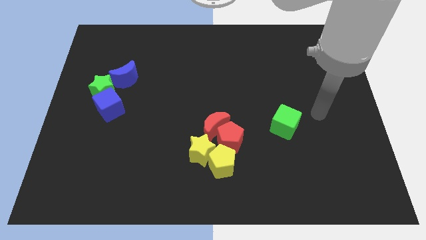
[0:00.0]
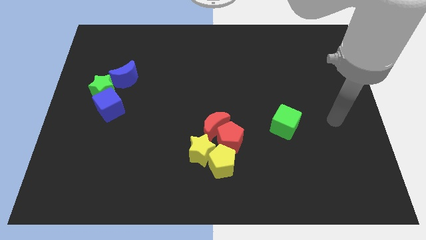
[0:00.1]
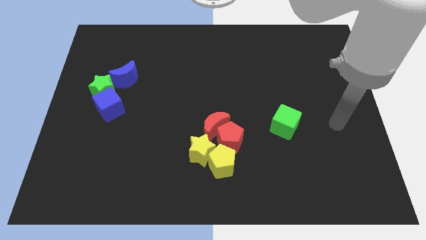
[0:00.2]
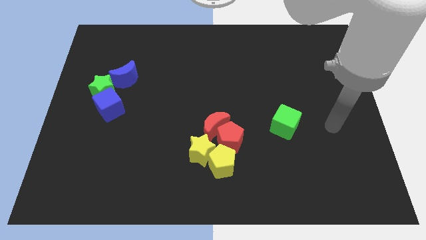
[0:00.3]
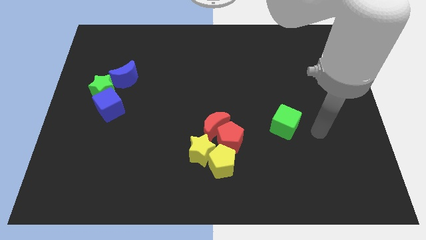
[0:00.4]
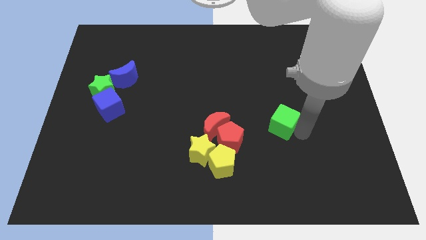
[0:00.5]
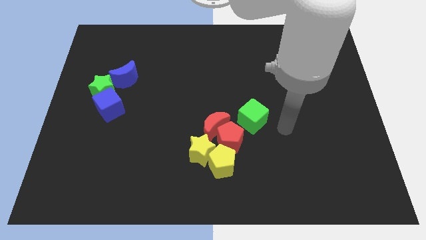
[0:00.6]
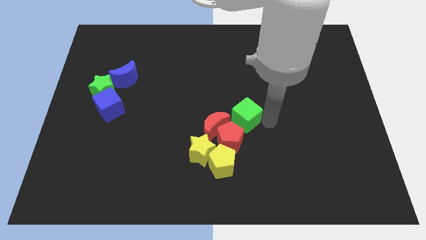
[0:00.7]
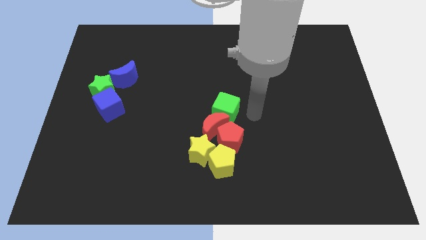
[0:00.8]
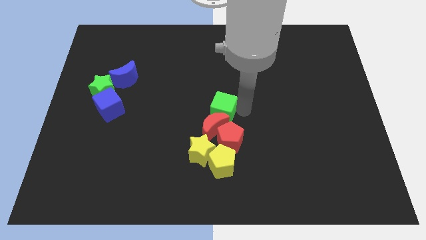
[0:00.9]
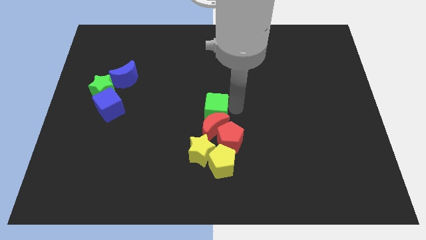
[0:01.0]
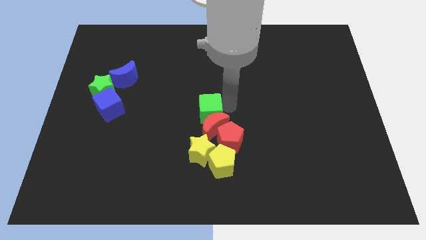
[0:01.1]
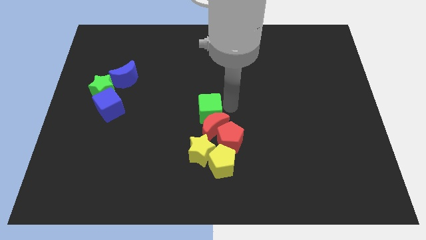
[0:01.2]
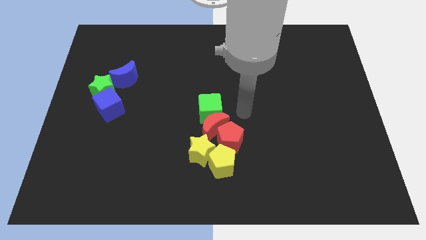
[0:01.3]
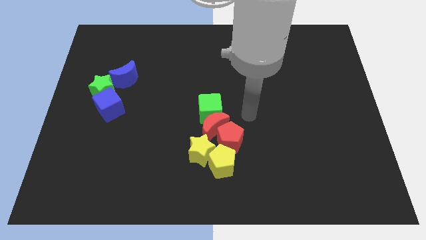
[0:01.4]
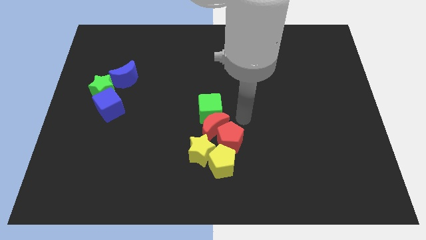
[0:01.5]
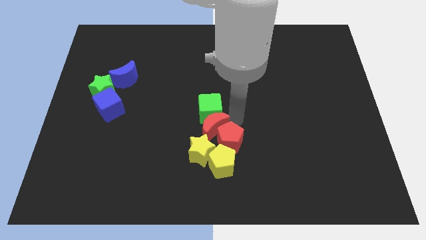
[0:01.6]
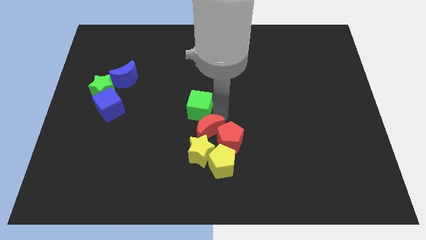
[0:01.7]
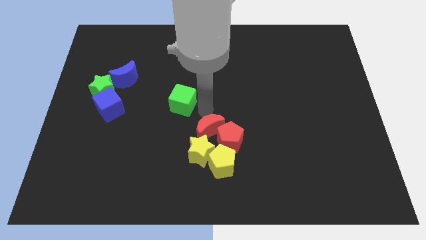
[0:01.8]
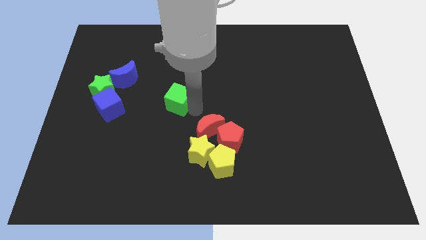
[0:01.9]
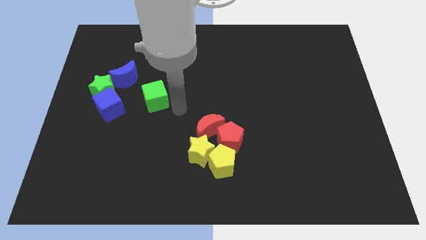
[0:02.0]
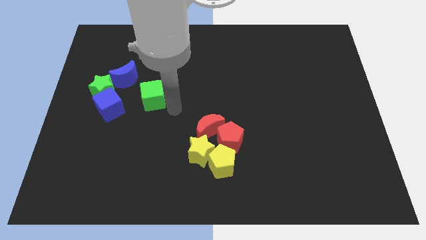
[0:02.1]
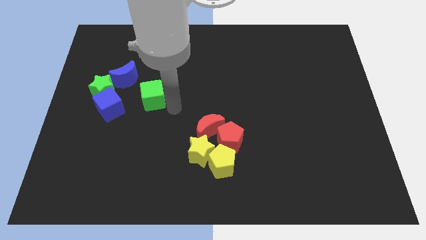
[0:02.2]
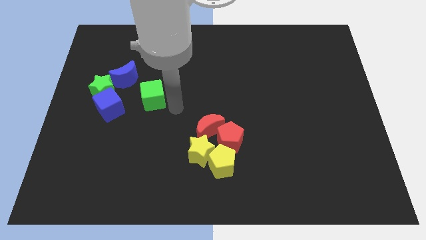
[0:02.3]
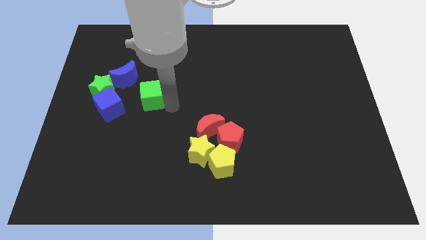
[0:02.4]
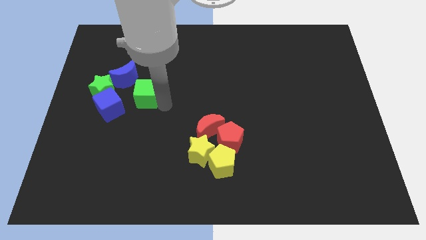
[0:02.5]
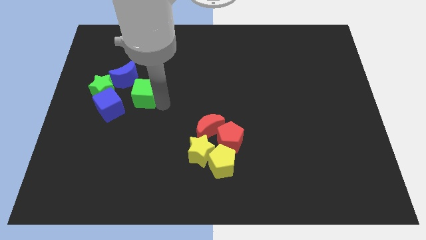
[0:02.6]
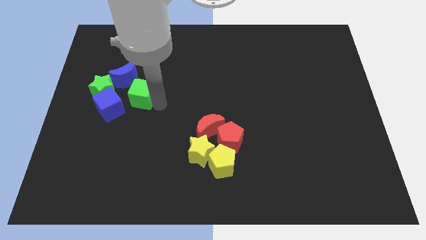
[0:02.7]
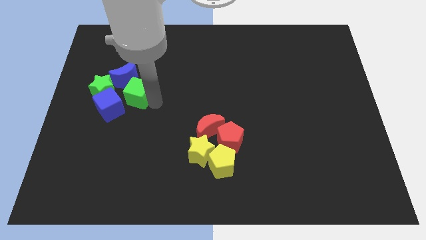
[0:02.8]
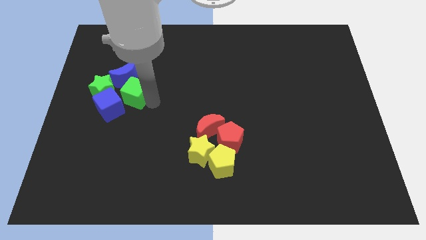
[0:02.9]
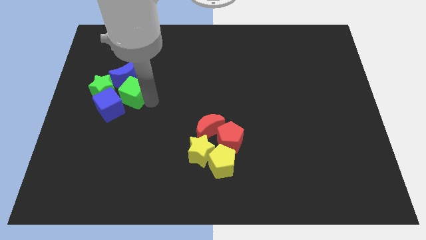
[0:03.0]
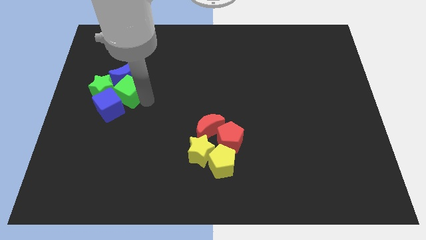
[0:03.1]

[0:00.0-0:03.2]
place the green cube beside the green star

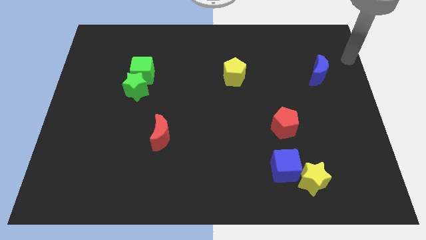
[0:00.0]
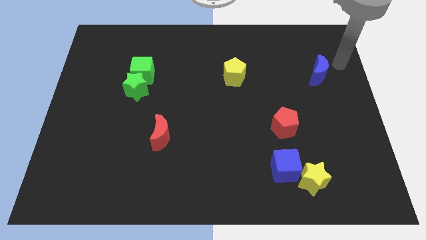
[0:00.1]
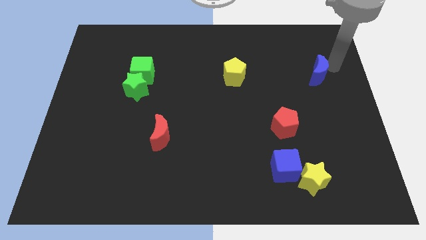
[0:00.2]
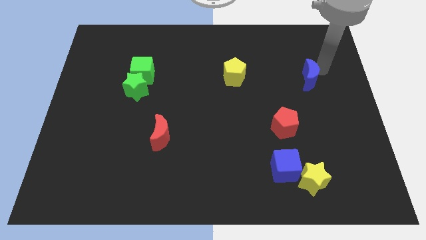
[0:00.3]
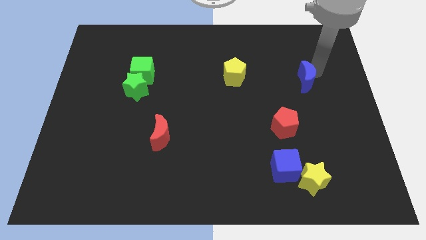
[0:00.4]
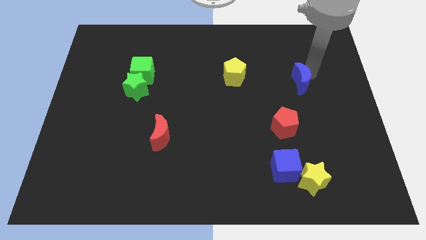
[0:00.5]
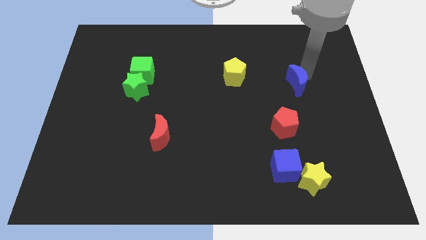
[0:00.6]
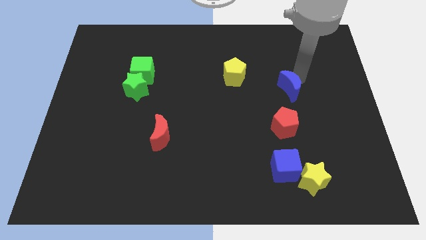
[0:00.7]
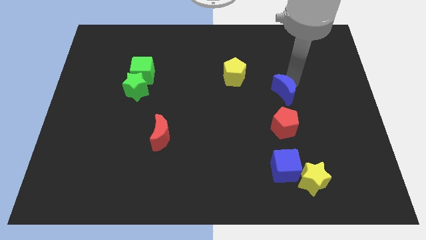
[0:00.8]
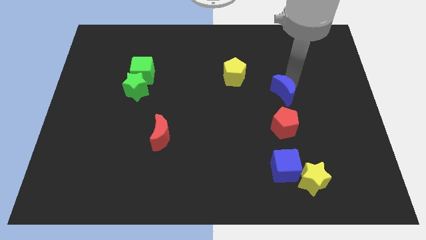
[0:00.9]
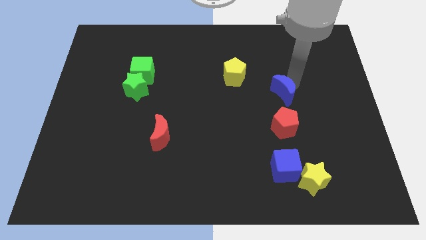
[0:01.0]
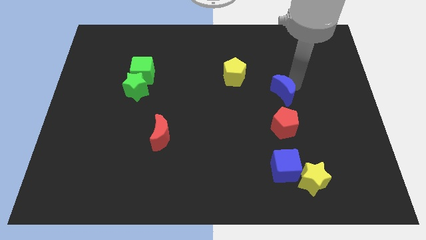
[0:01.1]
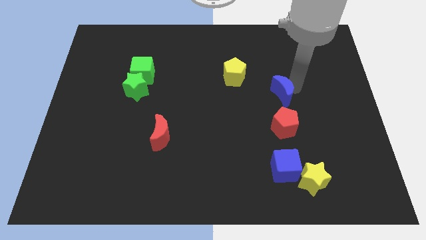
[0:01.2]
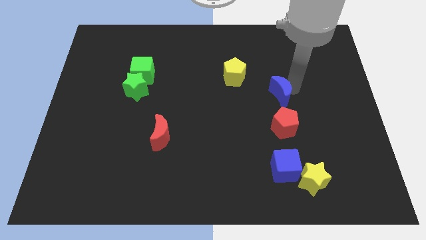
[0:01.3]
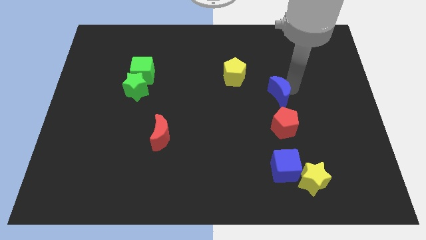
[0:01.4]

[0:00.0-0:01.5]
place the blue moon vertical to the red pentagon

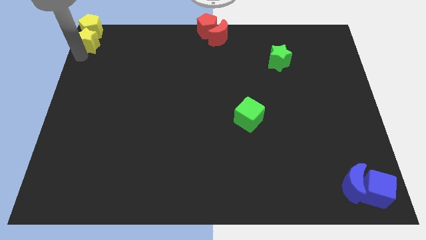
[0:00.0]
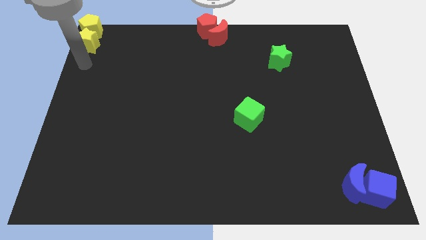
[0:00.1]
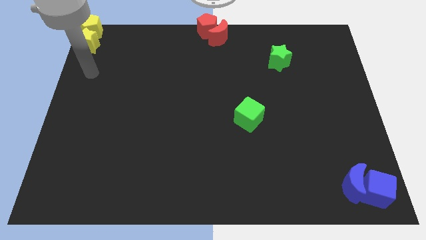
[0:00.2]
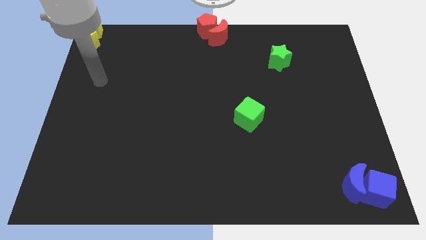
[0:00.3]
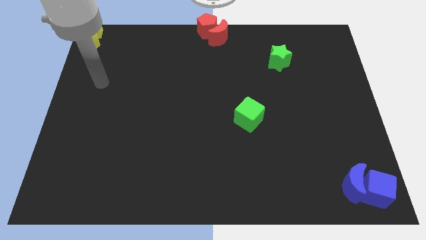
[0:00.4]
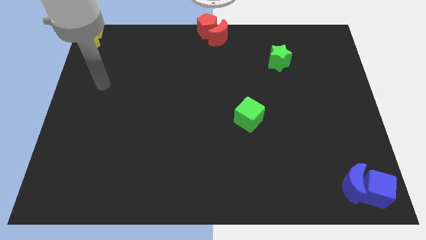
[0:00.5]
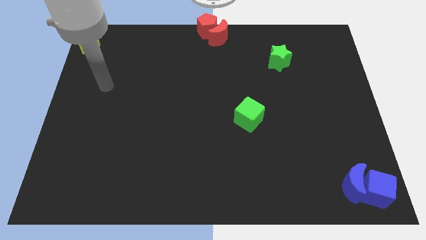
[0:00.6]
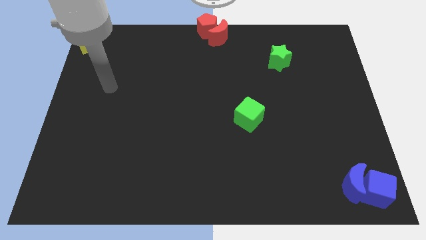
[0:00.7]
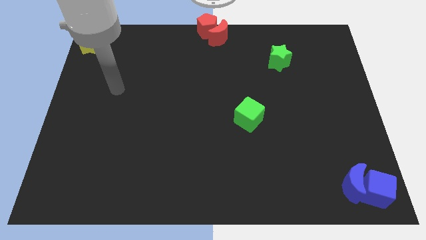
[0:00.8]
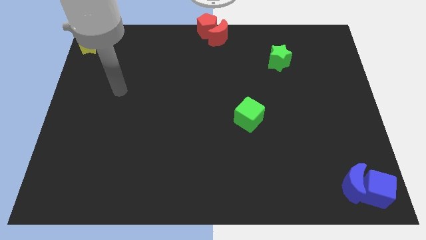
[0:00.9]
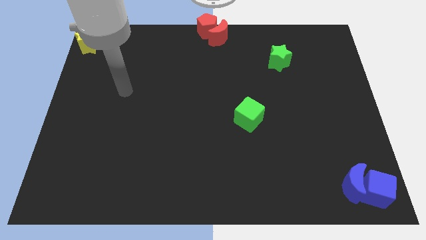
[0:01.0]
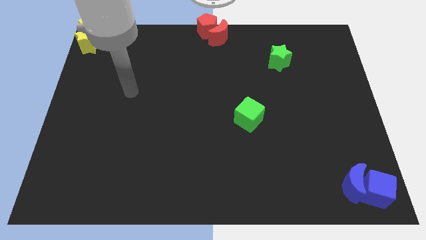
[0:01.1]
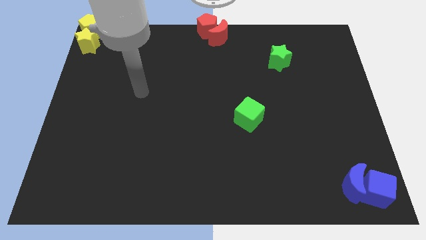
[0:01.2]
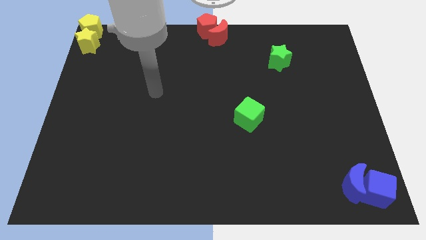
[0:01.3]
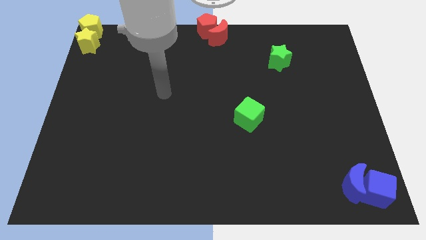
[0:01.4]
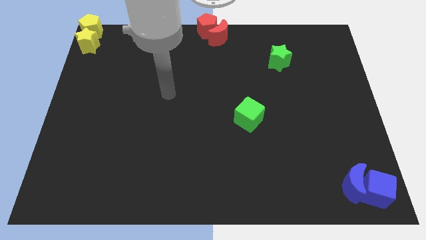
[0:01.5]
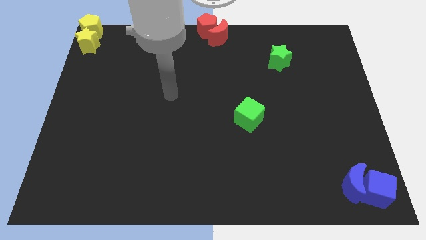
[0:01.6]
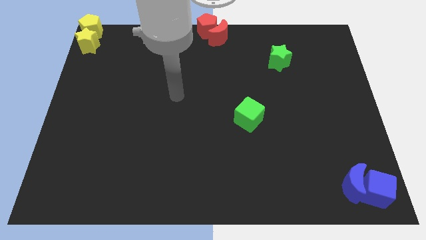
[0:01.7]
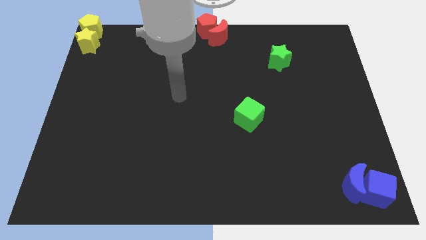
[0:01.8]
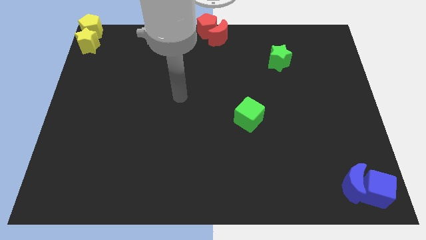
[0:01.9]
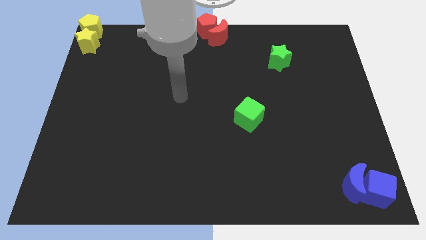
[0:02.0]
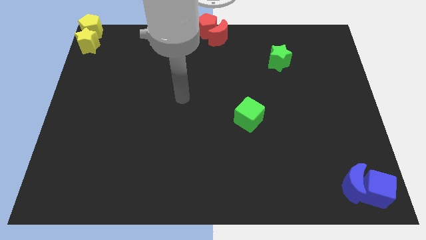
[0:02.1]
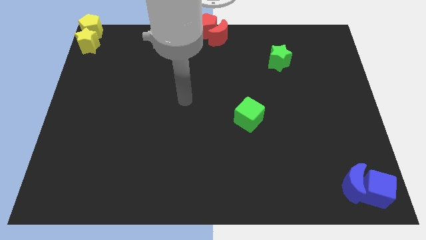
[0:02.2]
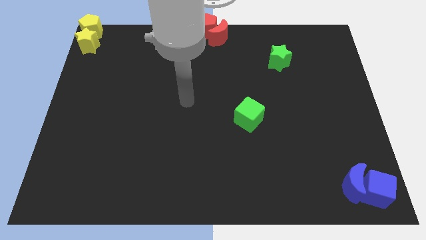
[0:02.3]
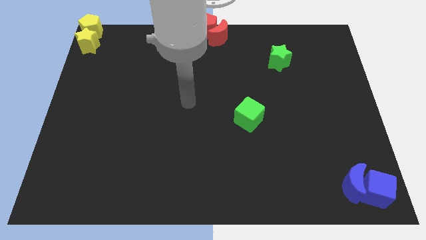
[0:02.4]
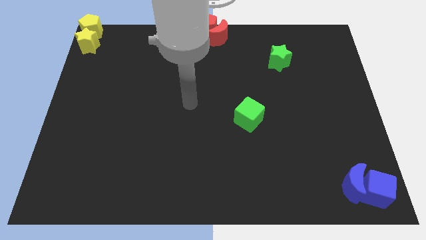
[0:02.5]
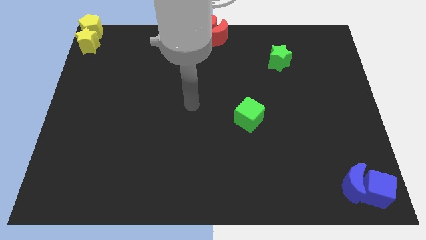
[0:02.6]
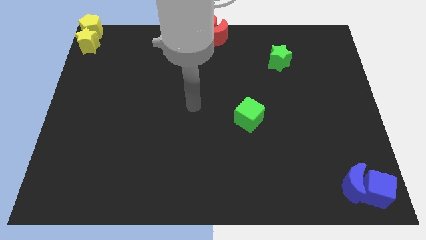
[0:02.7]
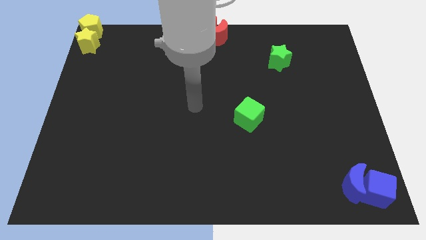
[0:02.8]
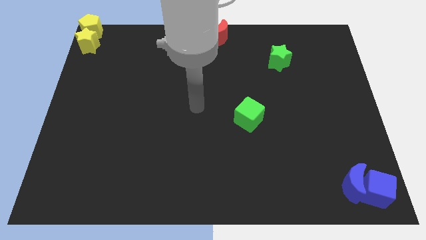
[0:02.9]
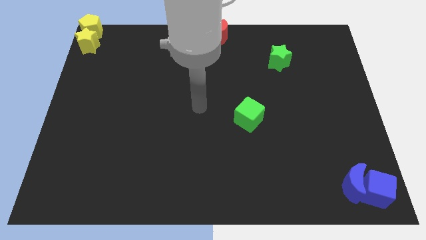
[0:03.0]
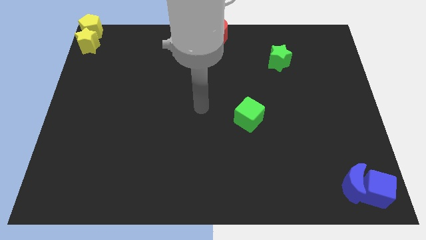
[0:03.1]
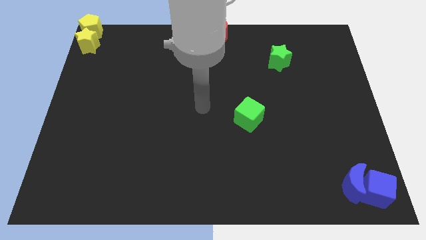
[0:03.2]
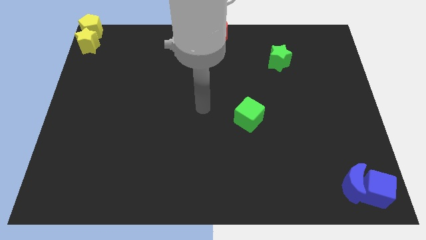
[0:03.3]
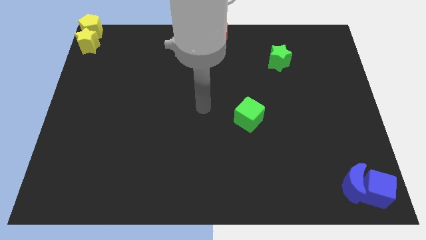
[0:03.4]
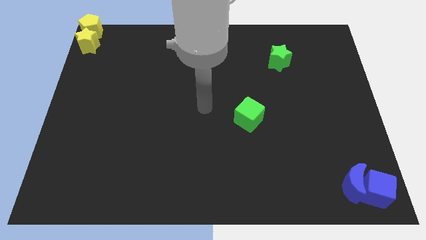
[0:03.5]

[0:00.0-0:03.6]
go to the left side of the green cube

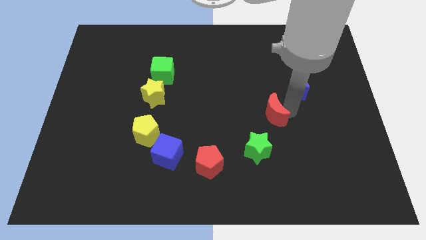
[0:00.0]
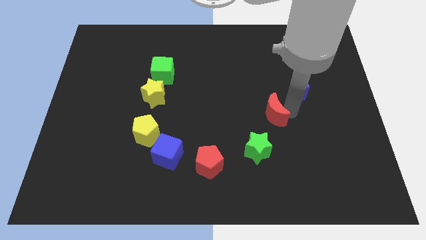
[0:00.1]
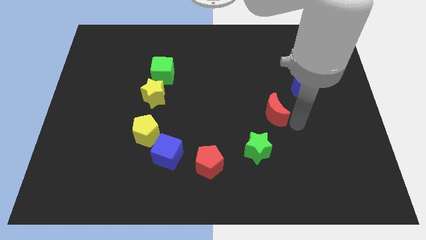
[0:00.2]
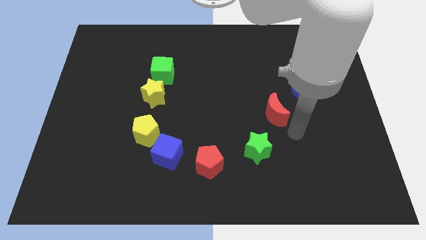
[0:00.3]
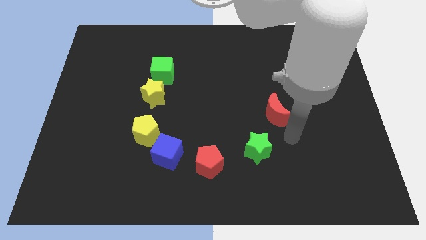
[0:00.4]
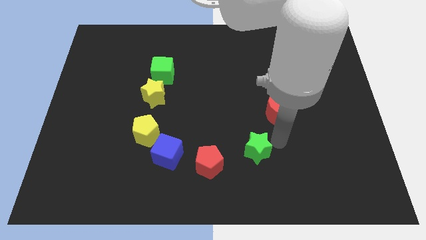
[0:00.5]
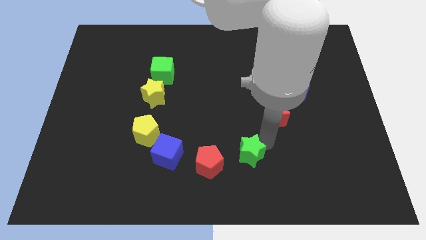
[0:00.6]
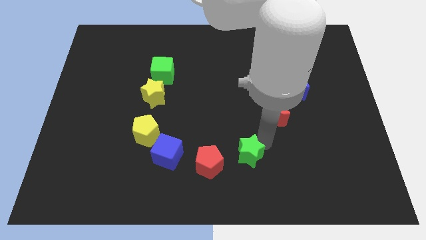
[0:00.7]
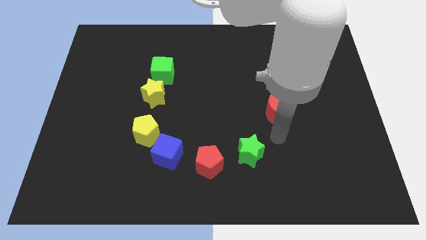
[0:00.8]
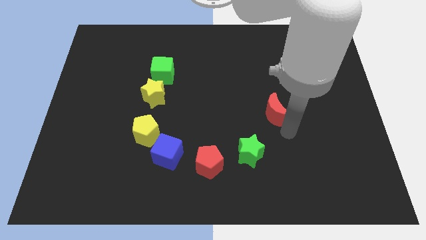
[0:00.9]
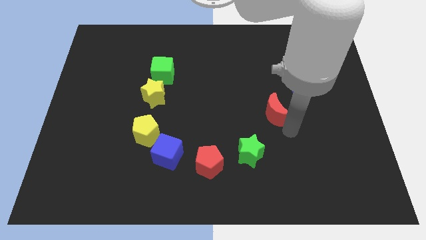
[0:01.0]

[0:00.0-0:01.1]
push the green star slightly towards red pentagon
